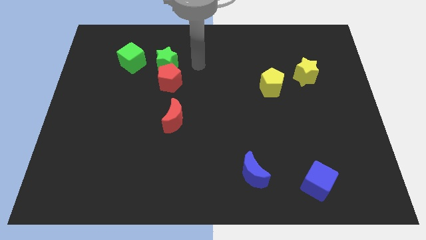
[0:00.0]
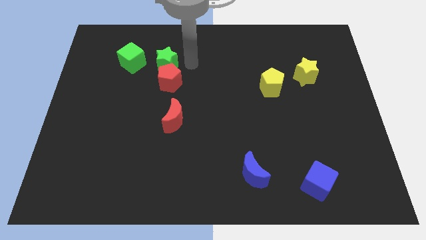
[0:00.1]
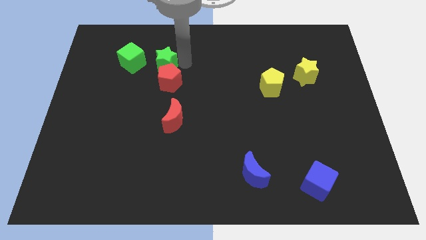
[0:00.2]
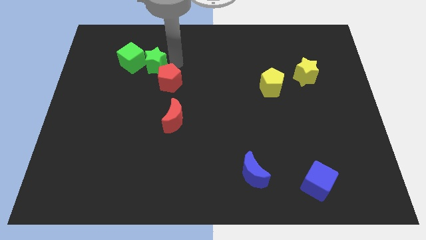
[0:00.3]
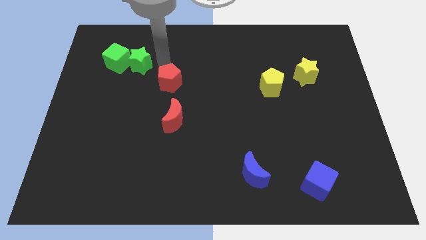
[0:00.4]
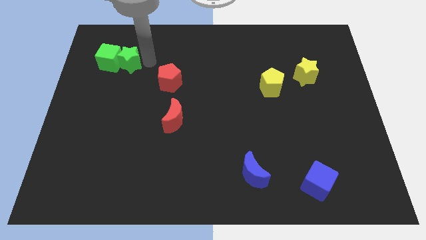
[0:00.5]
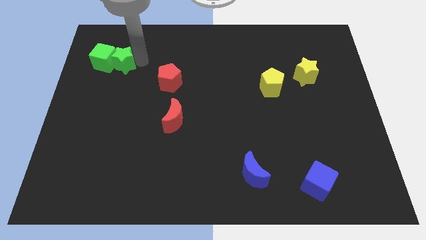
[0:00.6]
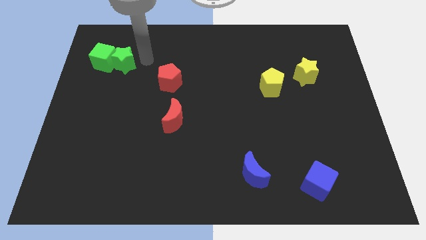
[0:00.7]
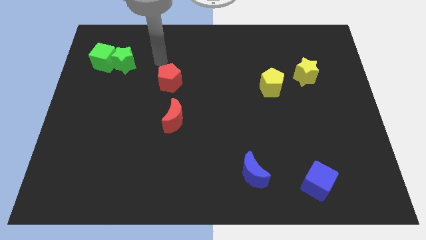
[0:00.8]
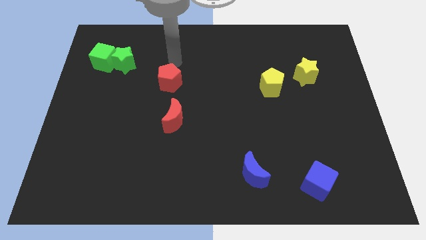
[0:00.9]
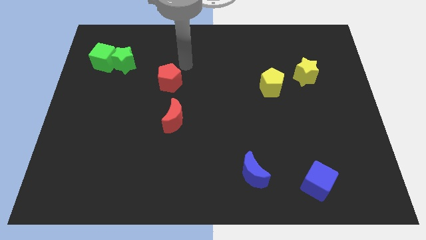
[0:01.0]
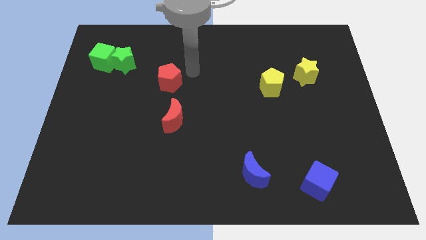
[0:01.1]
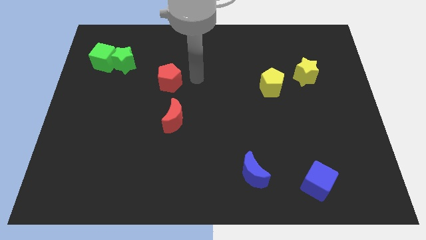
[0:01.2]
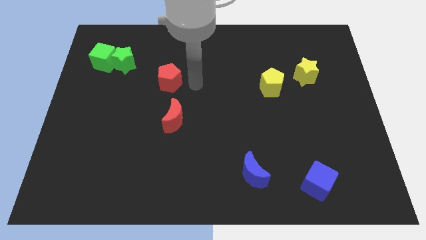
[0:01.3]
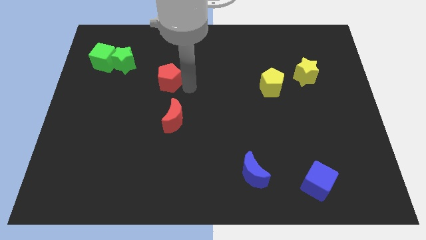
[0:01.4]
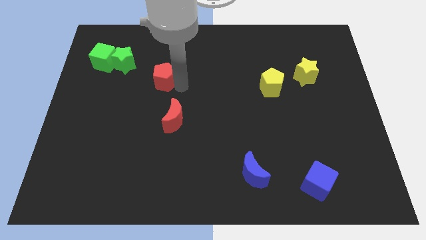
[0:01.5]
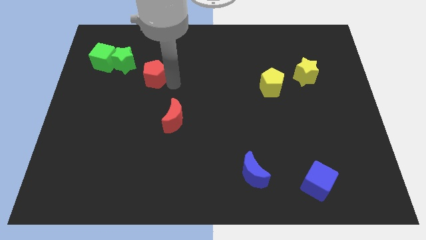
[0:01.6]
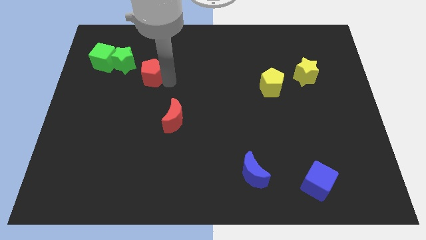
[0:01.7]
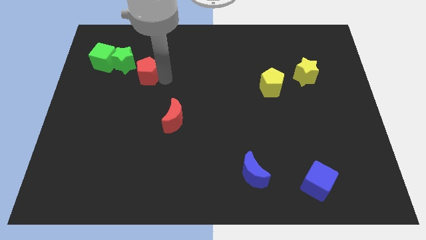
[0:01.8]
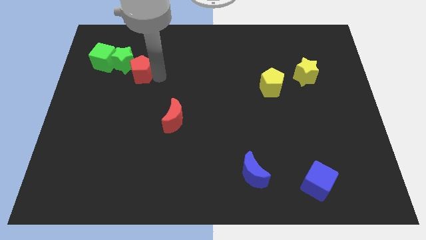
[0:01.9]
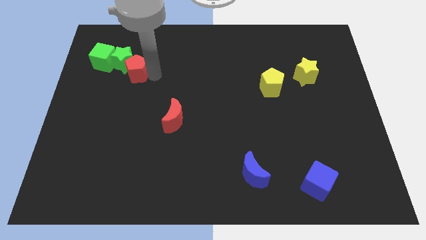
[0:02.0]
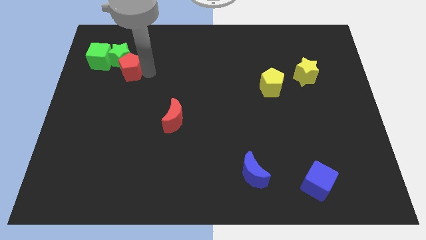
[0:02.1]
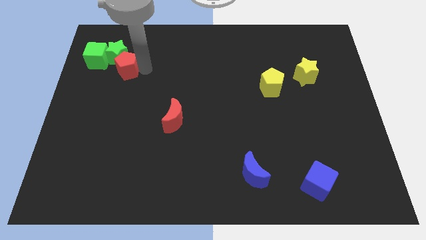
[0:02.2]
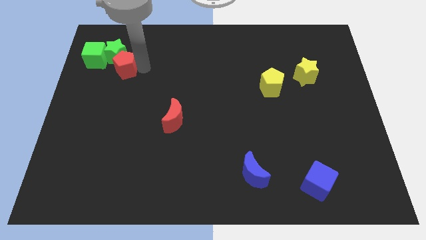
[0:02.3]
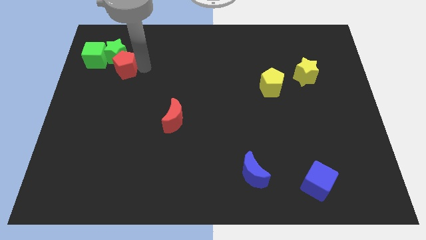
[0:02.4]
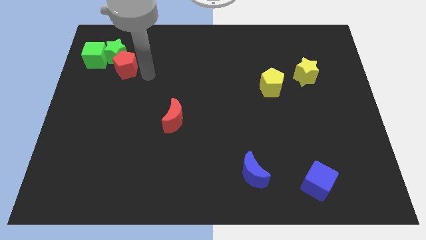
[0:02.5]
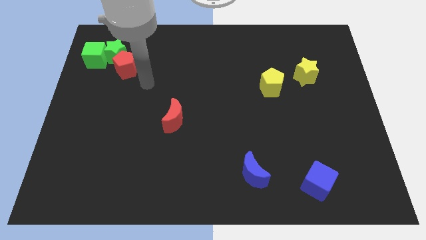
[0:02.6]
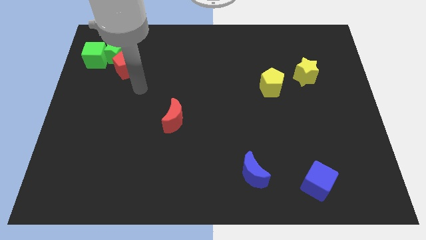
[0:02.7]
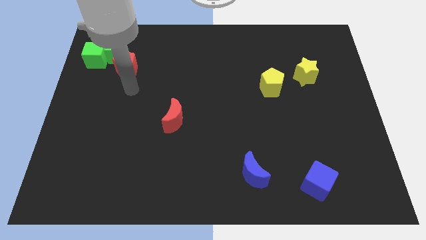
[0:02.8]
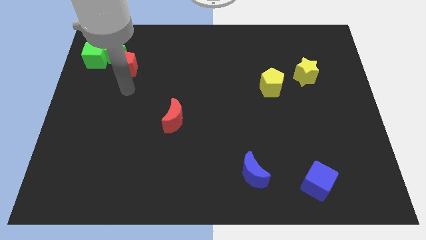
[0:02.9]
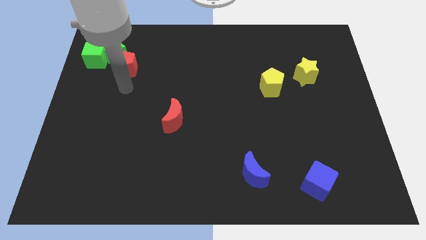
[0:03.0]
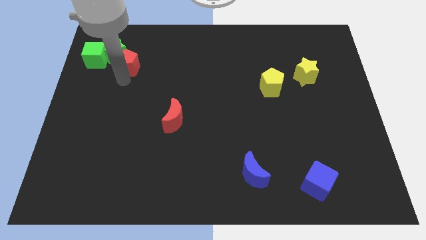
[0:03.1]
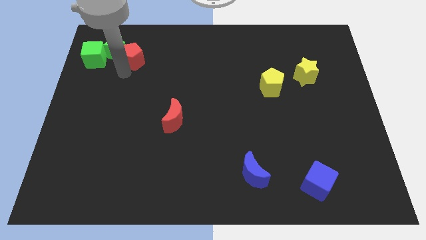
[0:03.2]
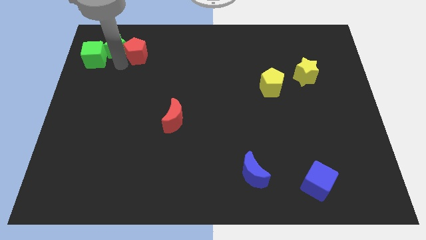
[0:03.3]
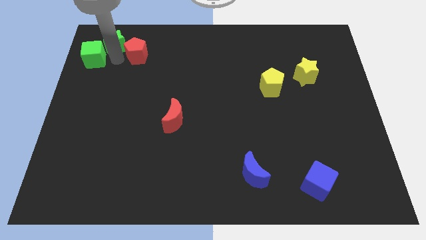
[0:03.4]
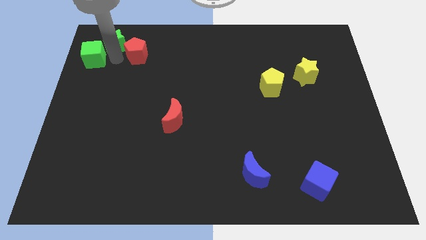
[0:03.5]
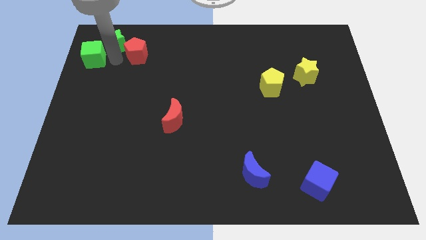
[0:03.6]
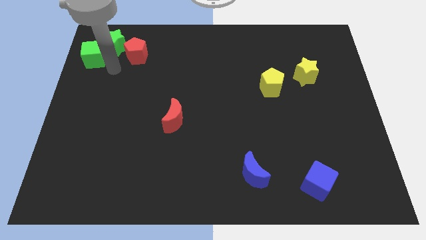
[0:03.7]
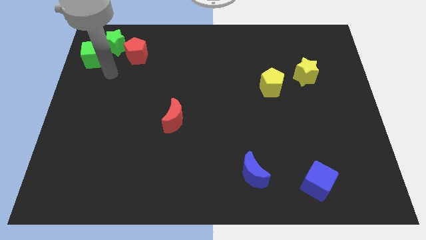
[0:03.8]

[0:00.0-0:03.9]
push the group of both green blocks and red pentagon towards the top left side of the board

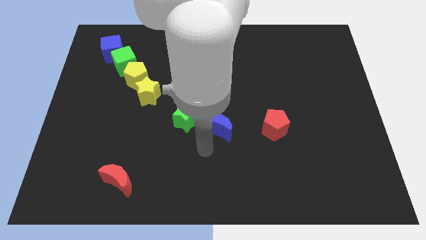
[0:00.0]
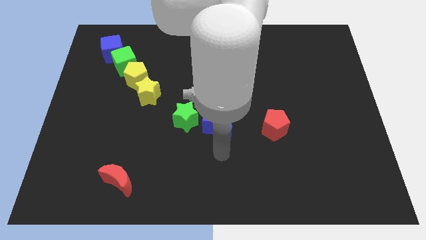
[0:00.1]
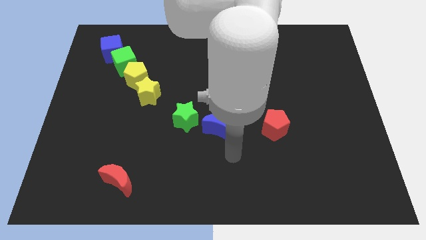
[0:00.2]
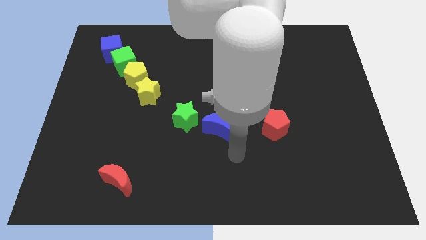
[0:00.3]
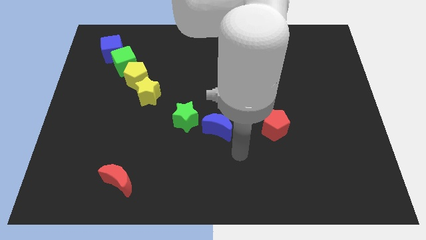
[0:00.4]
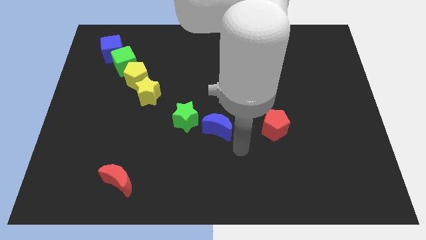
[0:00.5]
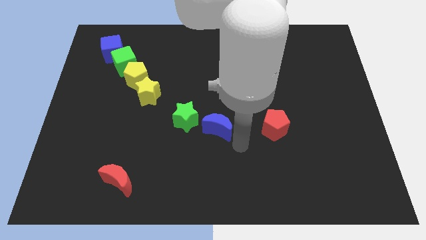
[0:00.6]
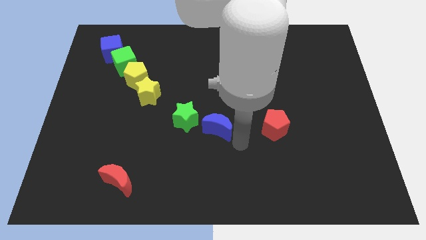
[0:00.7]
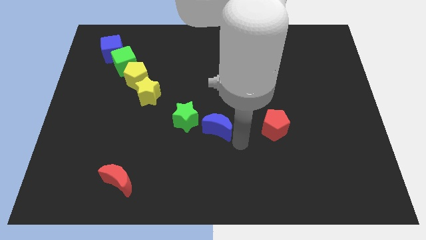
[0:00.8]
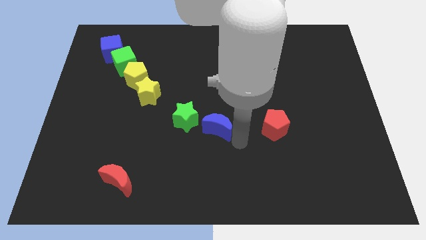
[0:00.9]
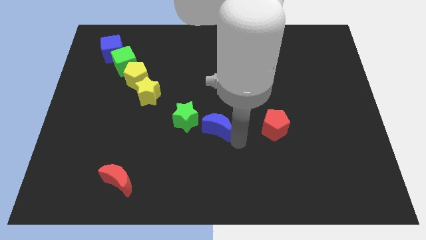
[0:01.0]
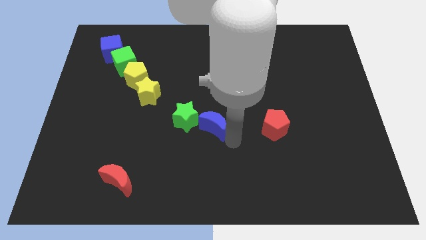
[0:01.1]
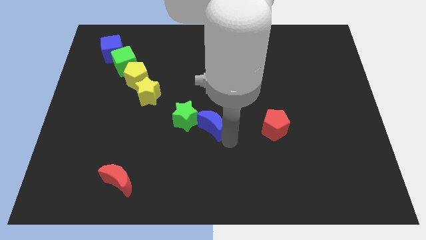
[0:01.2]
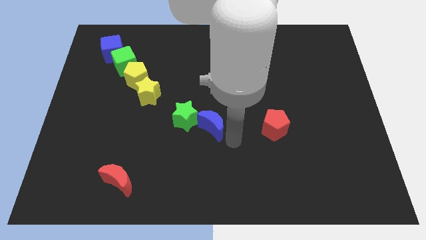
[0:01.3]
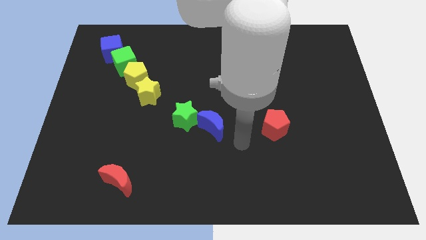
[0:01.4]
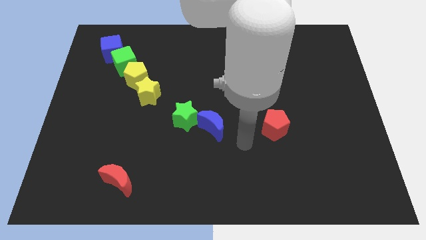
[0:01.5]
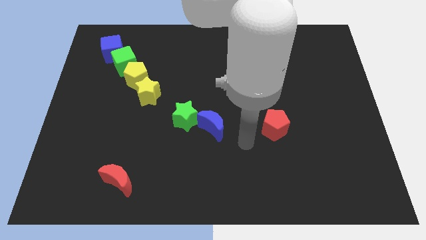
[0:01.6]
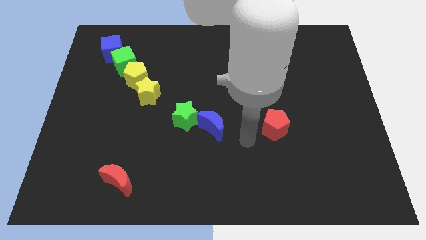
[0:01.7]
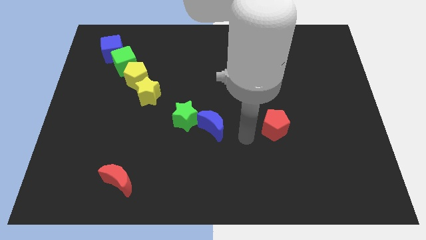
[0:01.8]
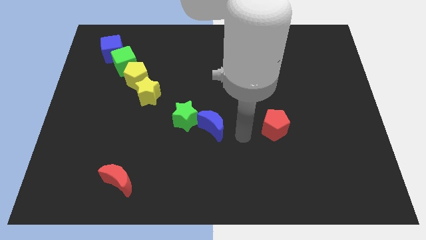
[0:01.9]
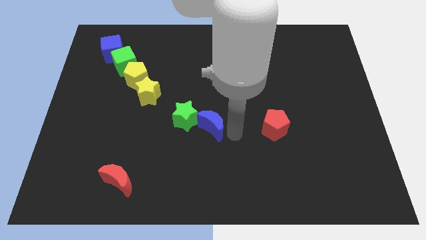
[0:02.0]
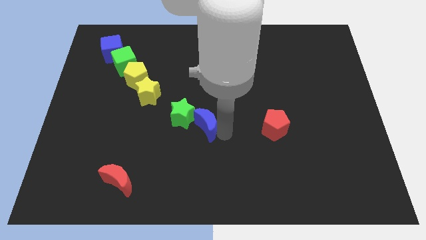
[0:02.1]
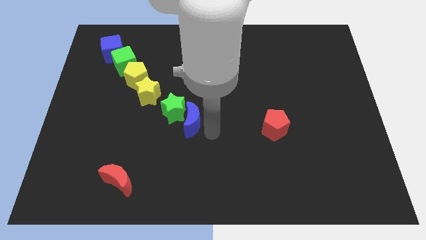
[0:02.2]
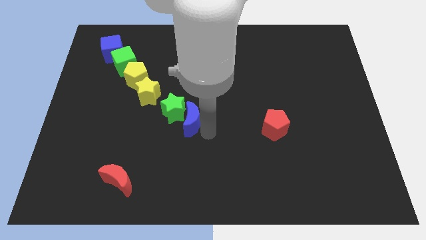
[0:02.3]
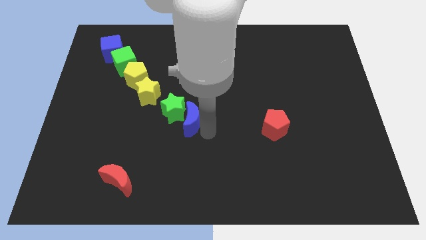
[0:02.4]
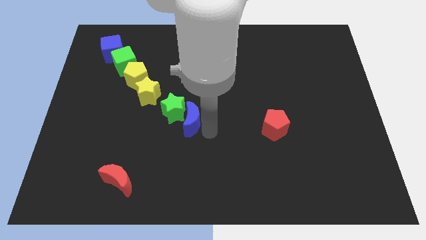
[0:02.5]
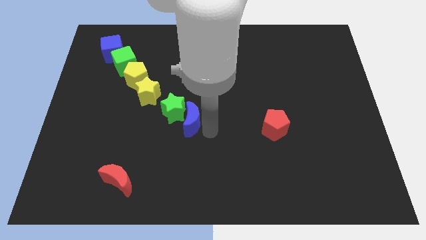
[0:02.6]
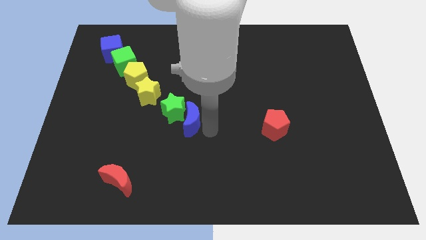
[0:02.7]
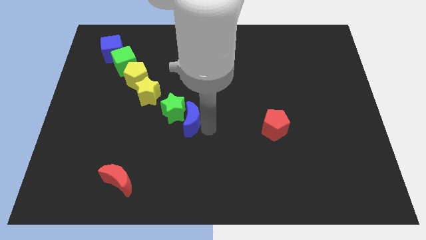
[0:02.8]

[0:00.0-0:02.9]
move the green star and blue crescent to the yellow star

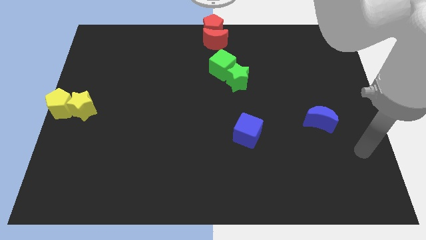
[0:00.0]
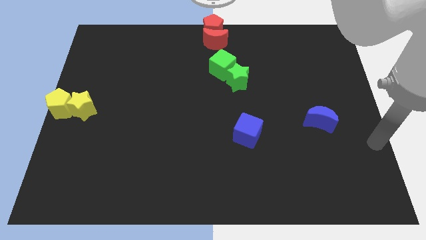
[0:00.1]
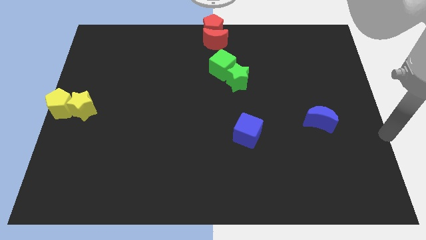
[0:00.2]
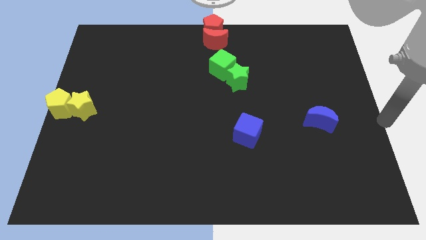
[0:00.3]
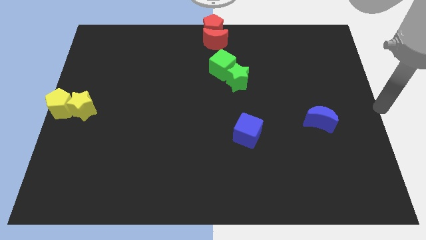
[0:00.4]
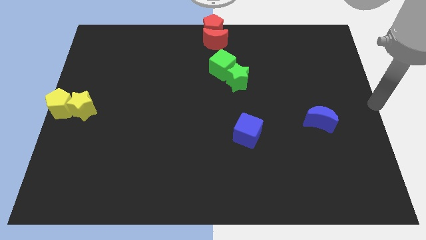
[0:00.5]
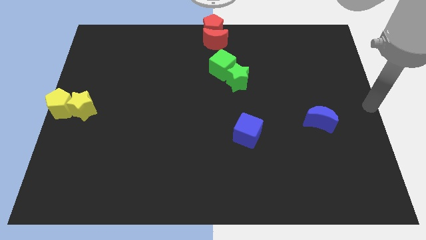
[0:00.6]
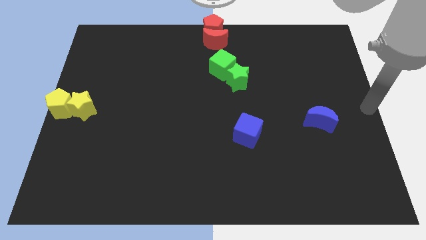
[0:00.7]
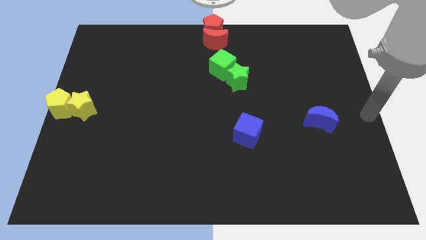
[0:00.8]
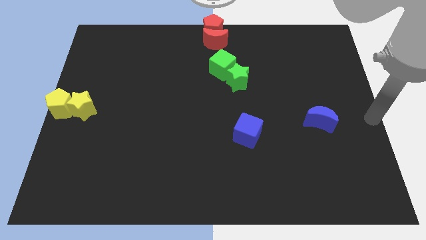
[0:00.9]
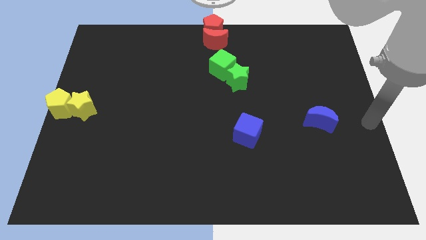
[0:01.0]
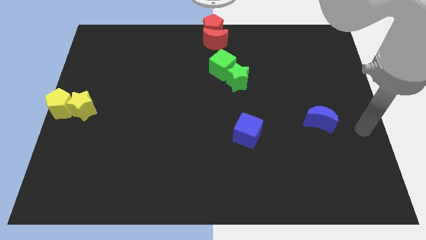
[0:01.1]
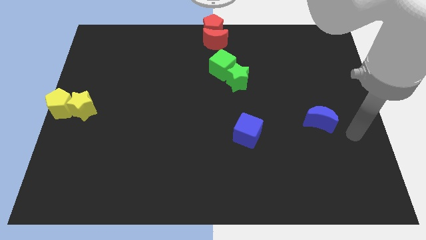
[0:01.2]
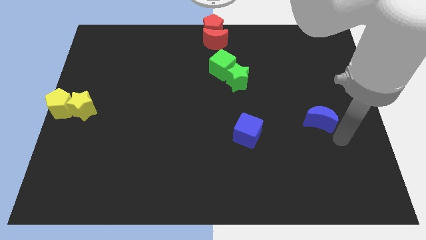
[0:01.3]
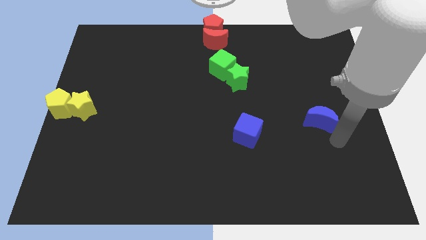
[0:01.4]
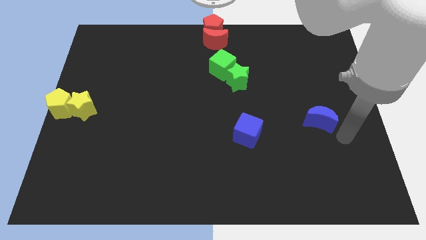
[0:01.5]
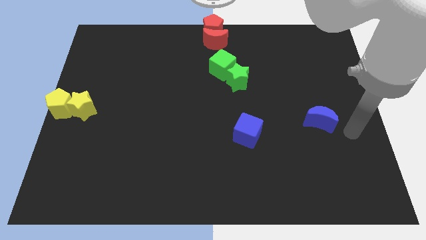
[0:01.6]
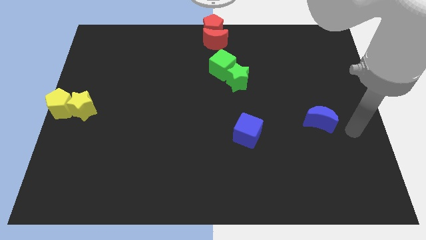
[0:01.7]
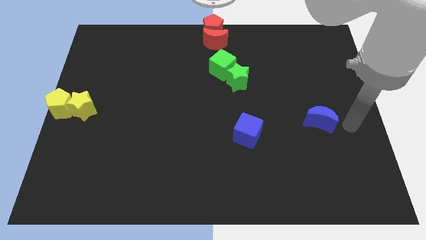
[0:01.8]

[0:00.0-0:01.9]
move your arm to the right of the blue crescent

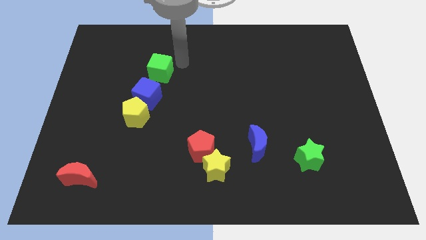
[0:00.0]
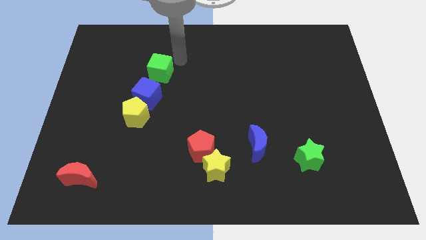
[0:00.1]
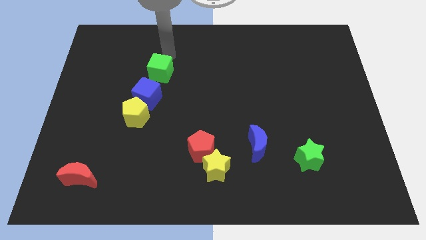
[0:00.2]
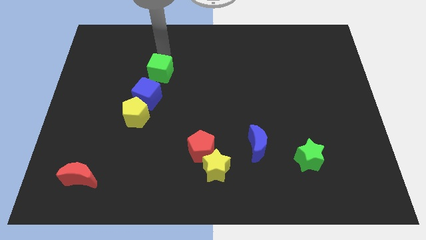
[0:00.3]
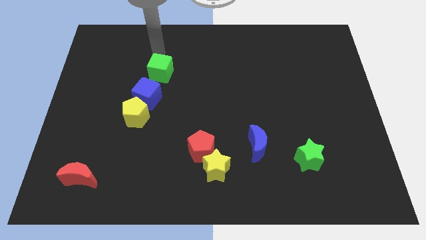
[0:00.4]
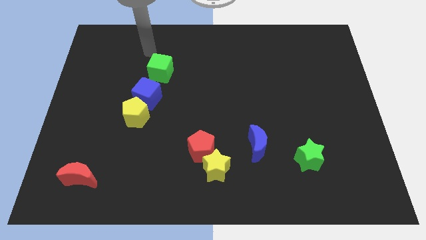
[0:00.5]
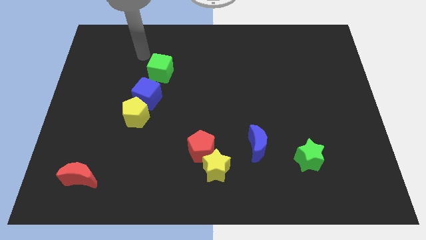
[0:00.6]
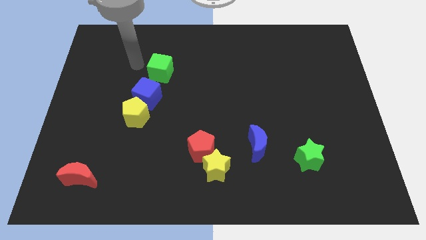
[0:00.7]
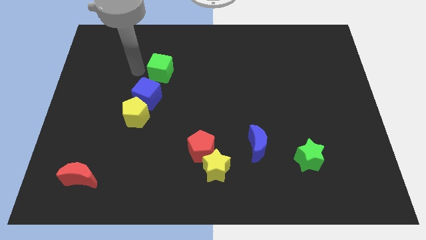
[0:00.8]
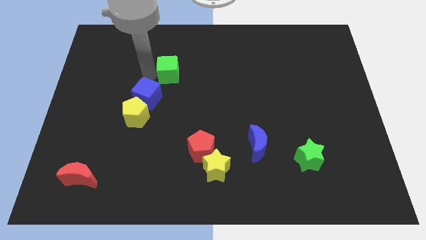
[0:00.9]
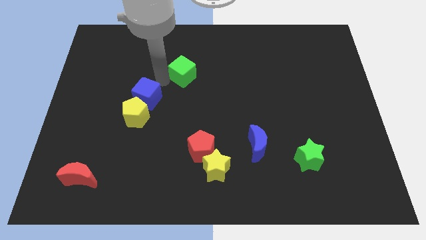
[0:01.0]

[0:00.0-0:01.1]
place your hand in between blue and green cubes
